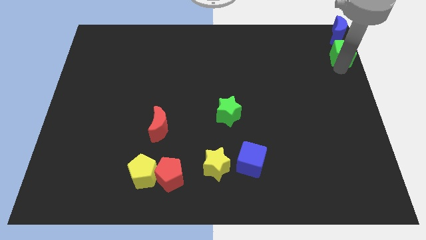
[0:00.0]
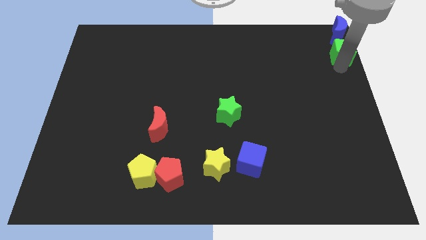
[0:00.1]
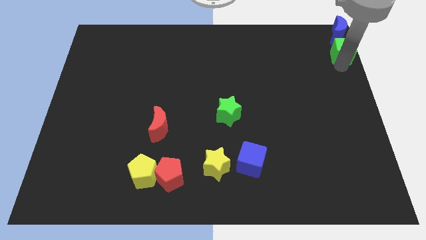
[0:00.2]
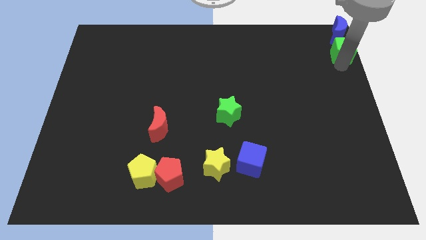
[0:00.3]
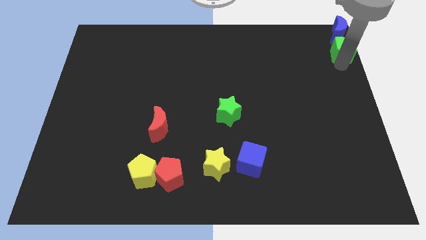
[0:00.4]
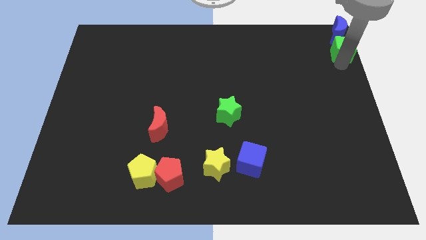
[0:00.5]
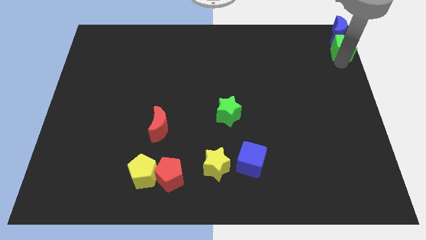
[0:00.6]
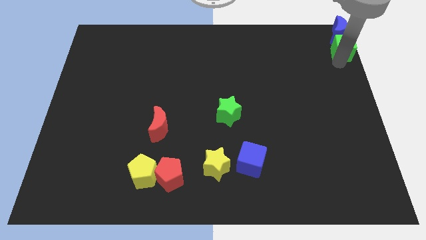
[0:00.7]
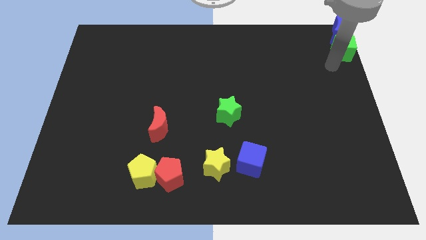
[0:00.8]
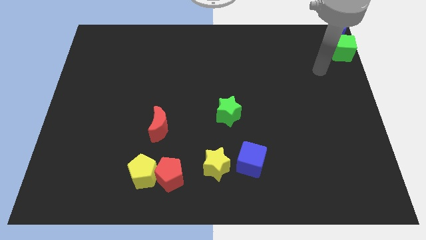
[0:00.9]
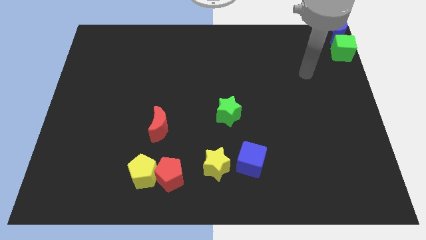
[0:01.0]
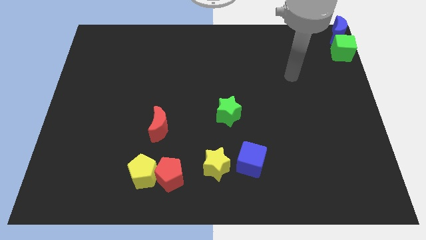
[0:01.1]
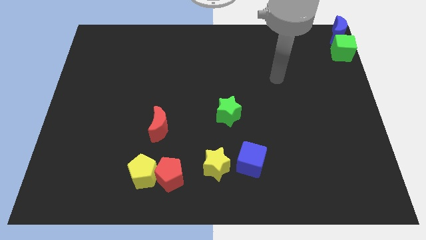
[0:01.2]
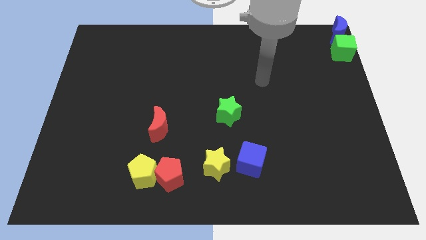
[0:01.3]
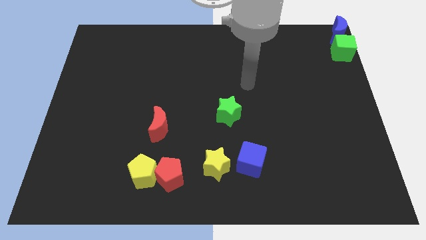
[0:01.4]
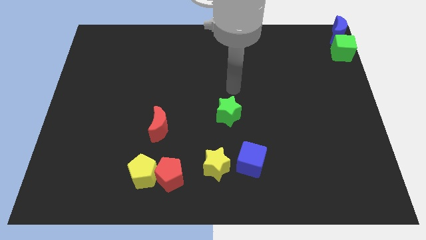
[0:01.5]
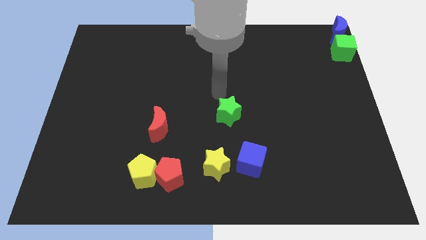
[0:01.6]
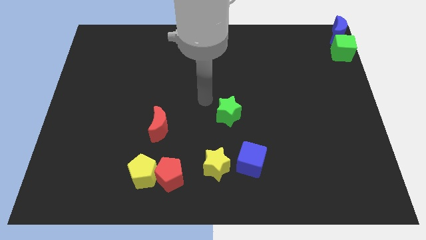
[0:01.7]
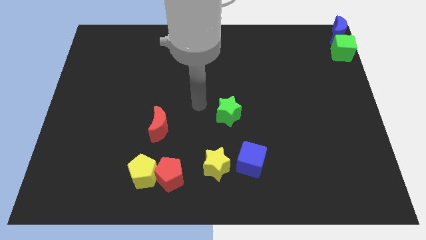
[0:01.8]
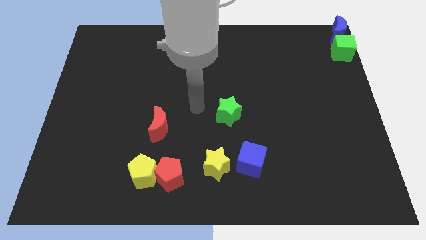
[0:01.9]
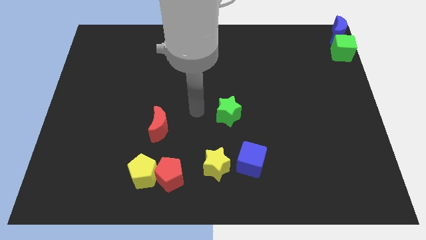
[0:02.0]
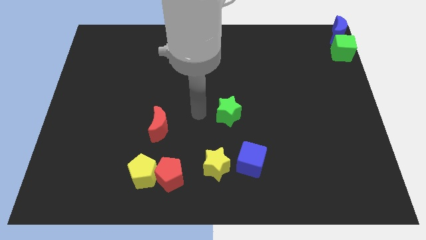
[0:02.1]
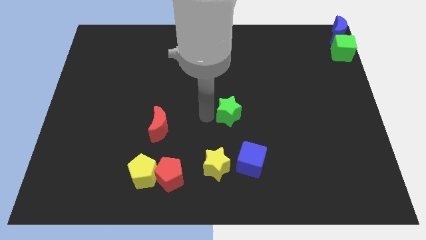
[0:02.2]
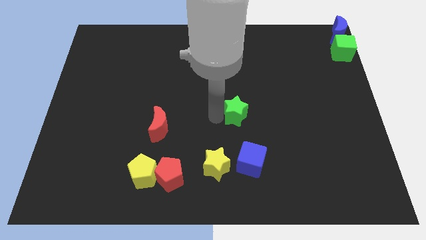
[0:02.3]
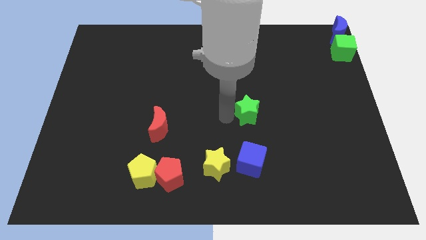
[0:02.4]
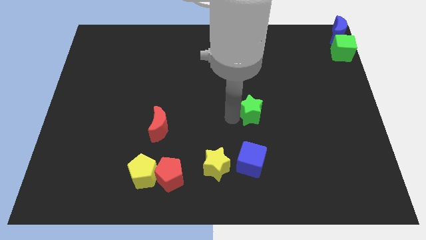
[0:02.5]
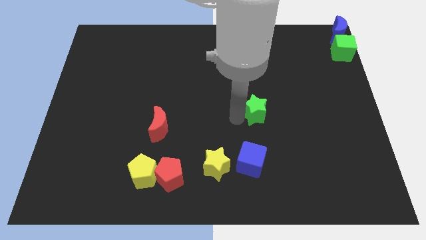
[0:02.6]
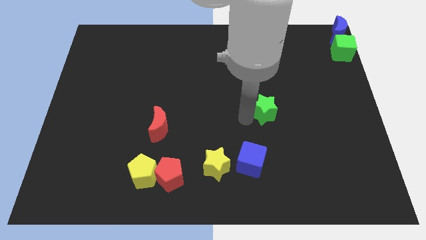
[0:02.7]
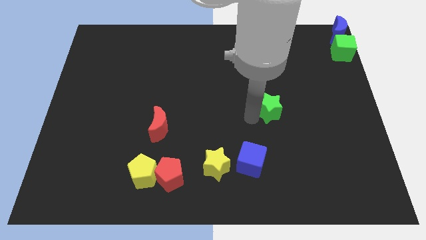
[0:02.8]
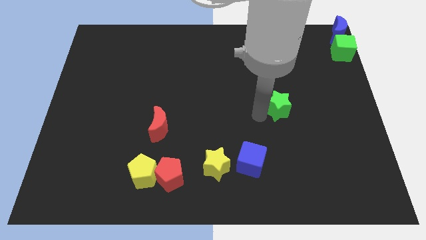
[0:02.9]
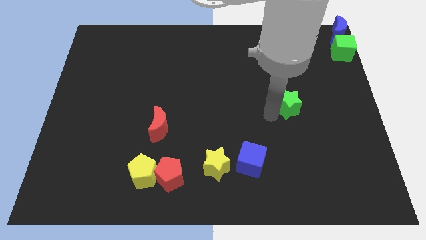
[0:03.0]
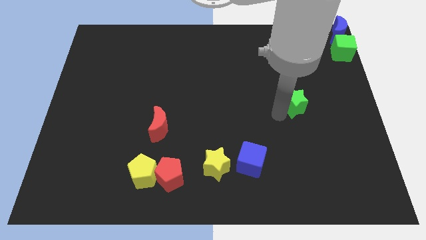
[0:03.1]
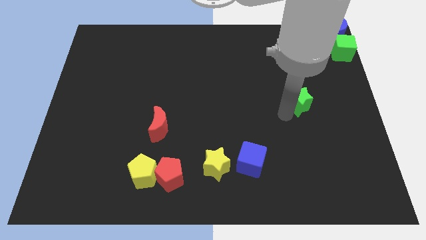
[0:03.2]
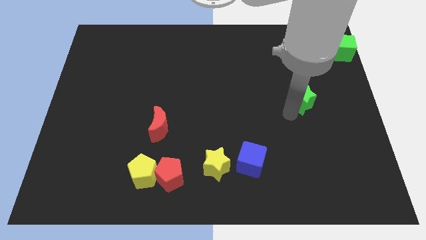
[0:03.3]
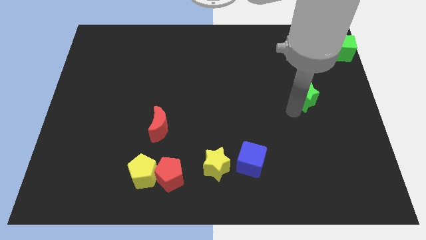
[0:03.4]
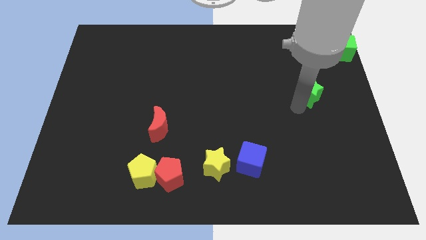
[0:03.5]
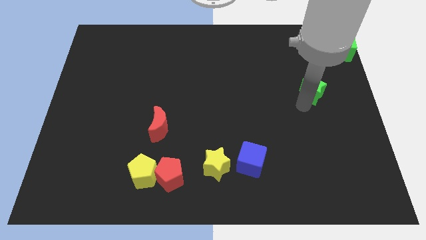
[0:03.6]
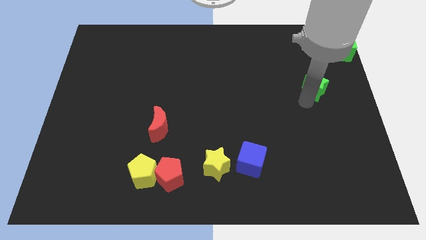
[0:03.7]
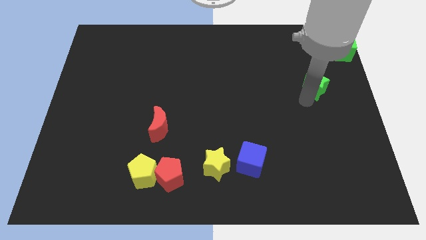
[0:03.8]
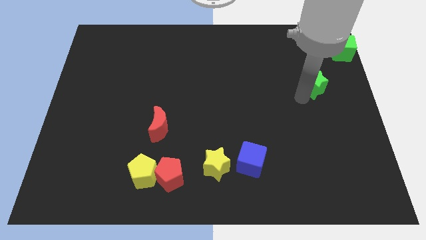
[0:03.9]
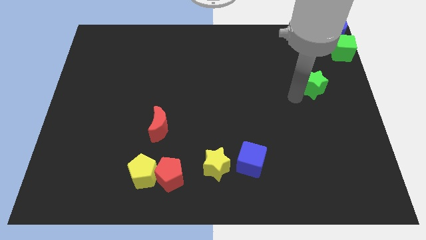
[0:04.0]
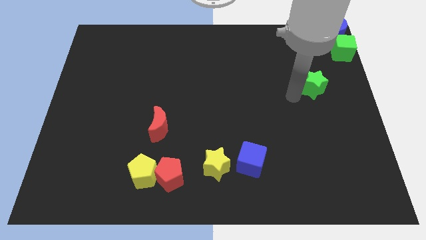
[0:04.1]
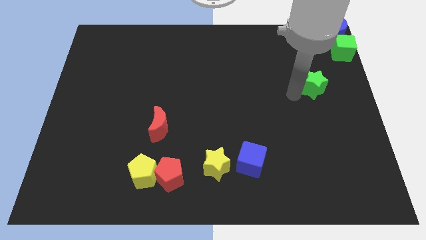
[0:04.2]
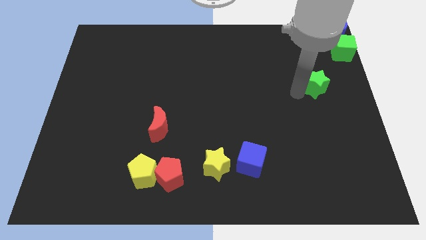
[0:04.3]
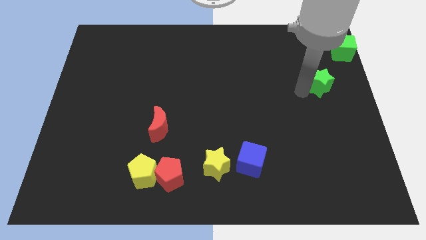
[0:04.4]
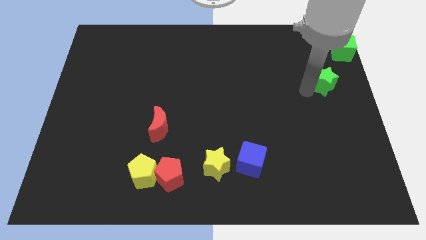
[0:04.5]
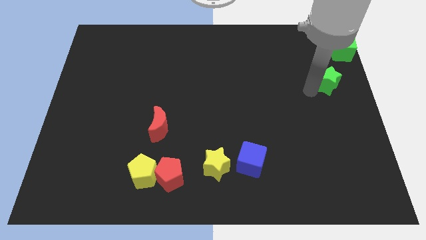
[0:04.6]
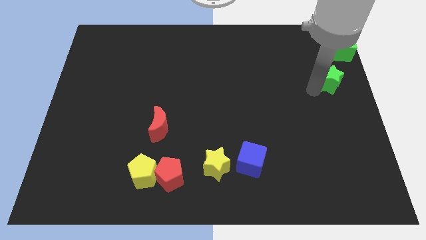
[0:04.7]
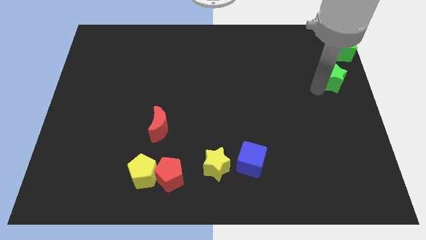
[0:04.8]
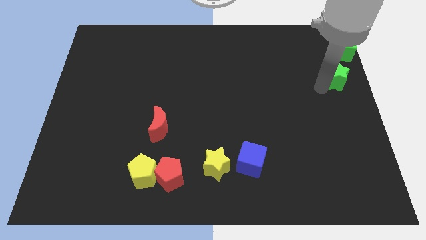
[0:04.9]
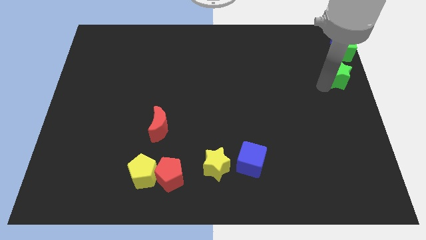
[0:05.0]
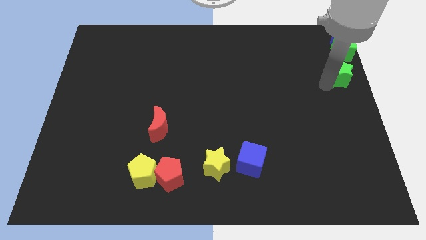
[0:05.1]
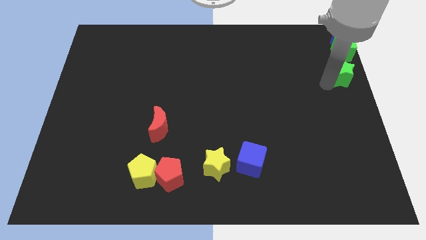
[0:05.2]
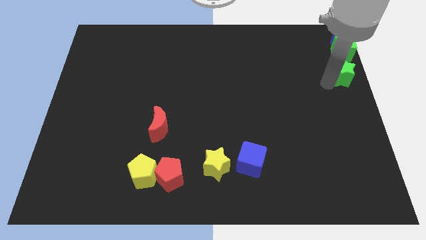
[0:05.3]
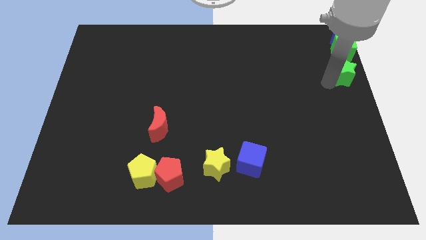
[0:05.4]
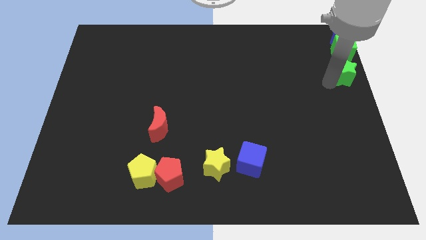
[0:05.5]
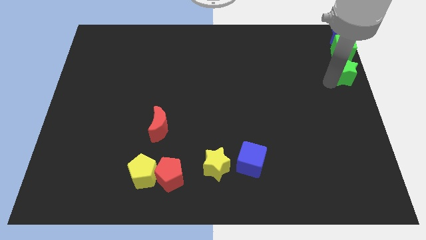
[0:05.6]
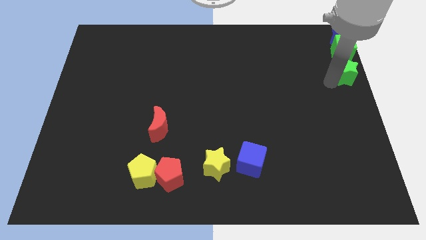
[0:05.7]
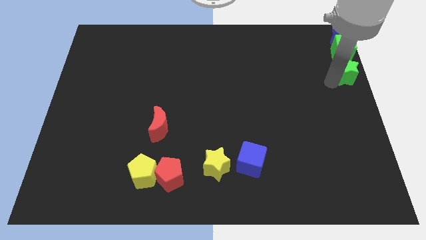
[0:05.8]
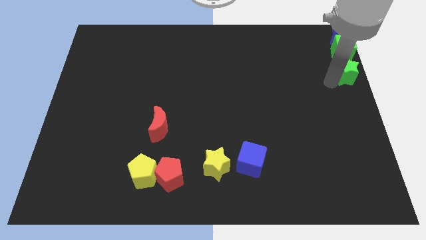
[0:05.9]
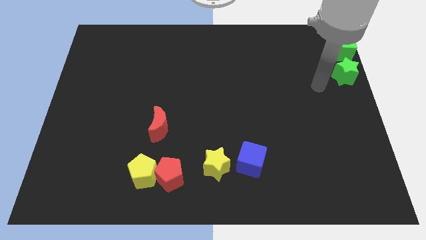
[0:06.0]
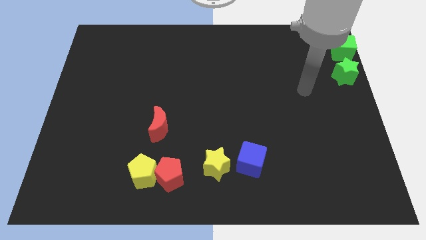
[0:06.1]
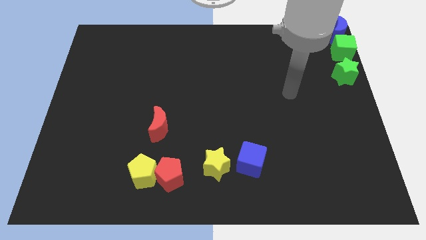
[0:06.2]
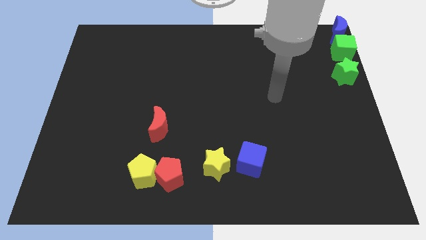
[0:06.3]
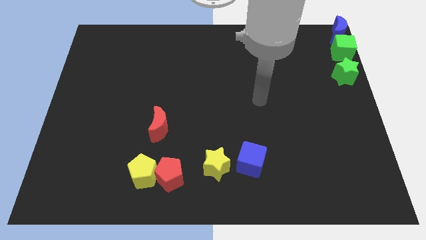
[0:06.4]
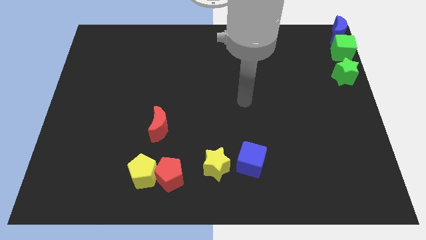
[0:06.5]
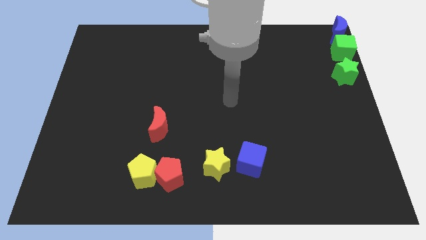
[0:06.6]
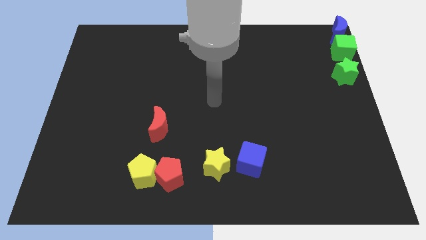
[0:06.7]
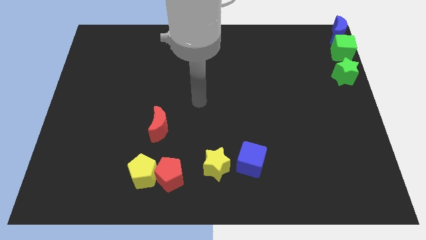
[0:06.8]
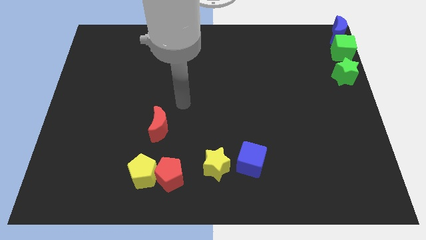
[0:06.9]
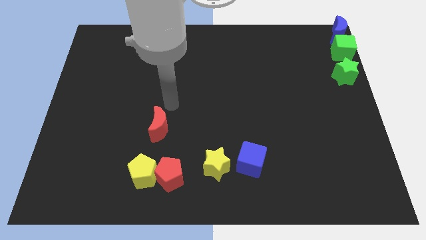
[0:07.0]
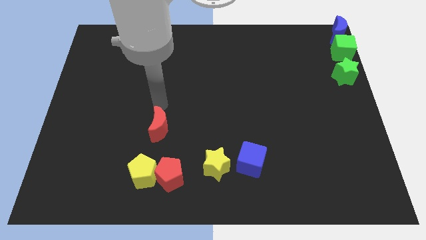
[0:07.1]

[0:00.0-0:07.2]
place the green star vertical to the green cube

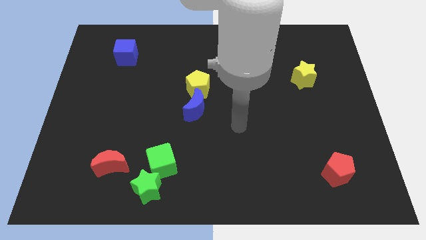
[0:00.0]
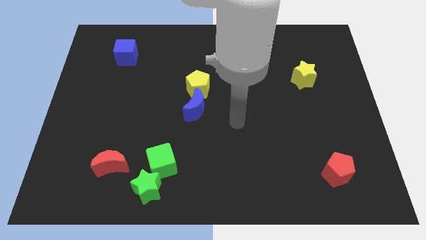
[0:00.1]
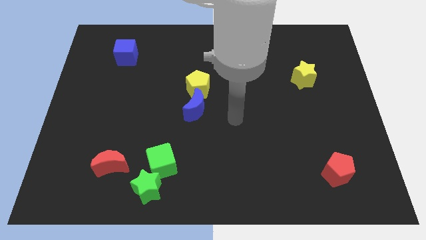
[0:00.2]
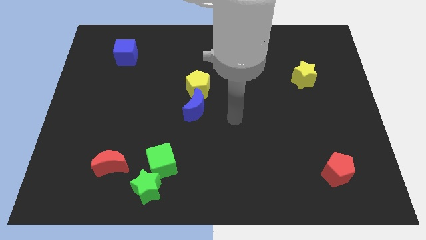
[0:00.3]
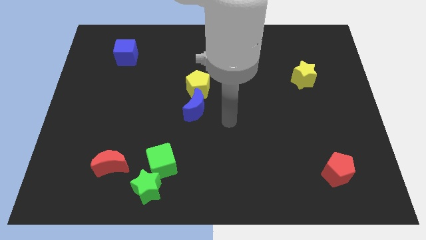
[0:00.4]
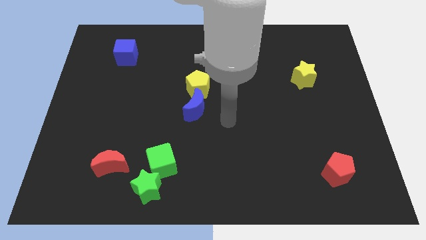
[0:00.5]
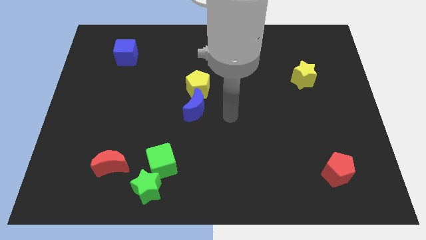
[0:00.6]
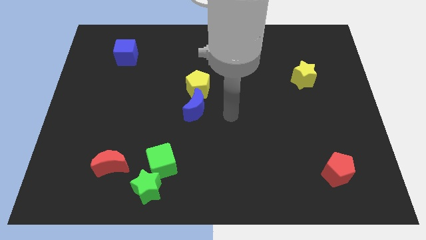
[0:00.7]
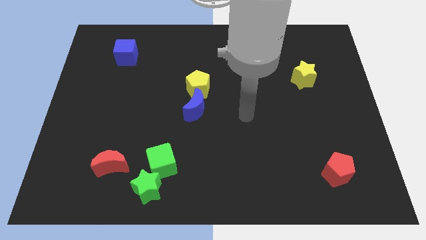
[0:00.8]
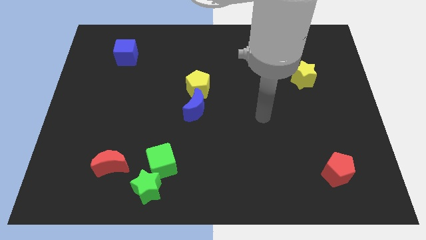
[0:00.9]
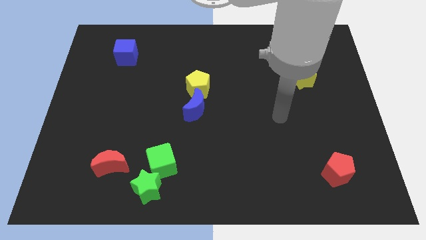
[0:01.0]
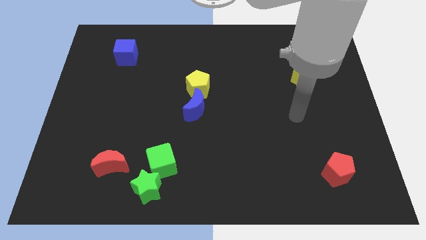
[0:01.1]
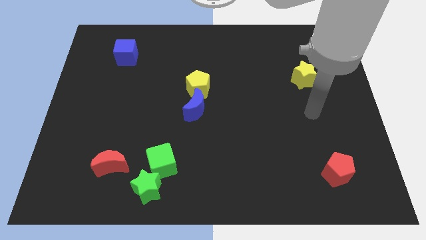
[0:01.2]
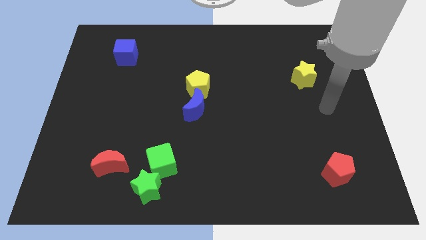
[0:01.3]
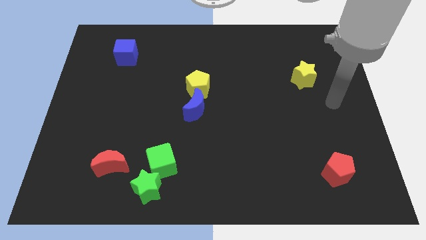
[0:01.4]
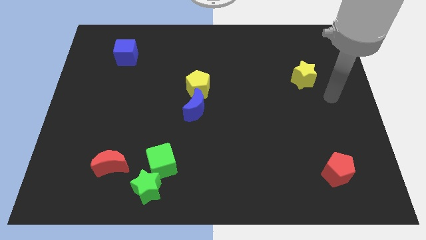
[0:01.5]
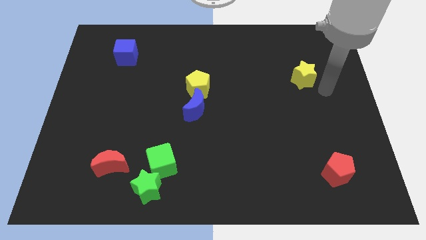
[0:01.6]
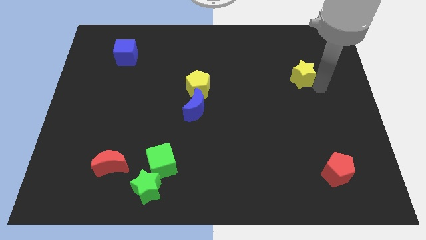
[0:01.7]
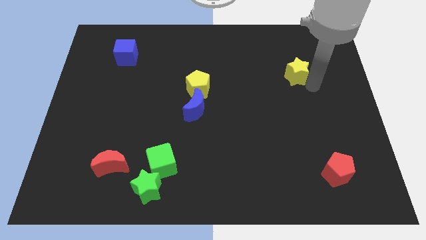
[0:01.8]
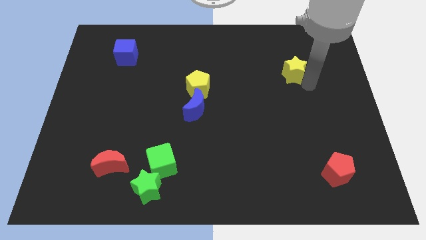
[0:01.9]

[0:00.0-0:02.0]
slightly move the yellow star to the left of the board

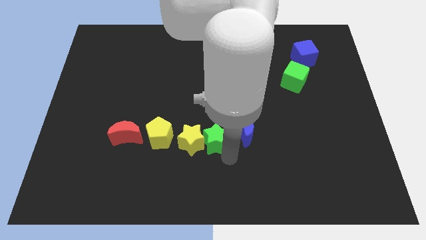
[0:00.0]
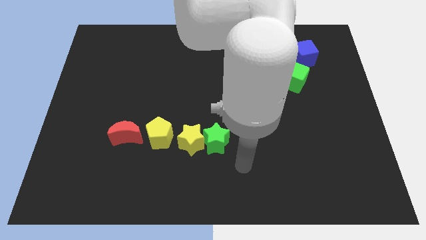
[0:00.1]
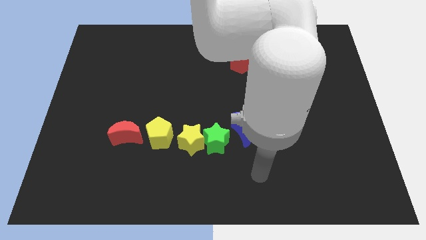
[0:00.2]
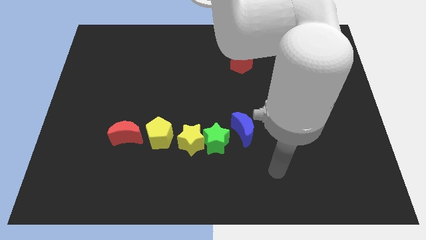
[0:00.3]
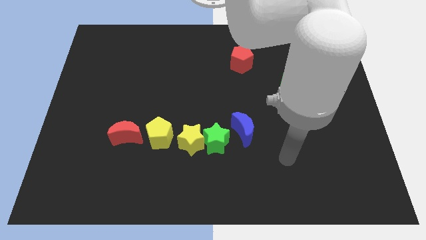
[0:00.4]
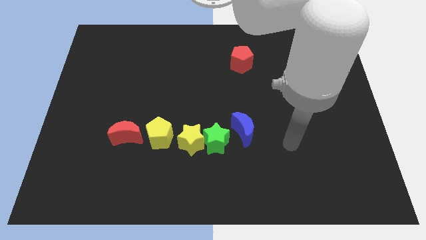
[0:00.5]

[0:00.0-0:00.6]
point your arm at the right of the blue crescent
